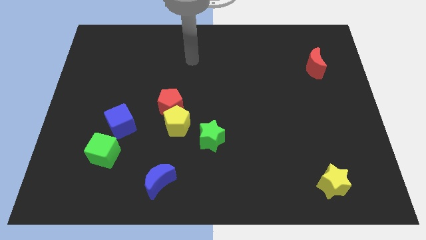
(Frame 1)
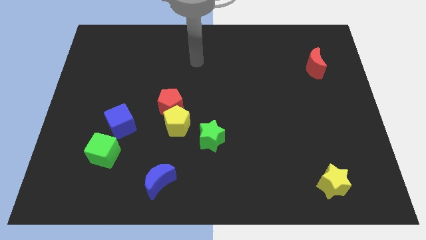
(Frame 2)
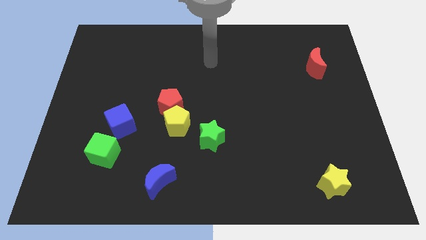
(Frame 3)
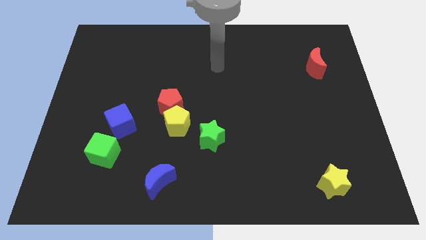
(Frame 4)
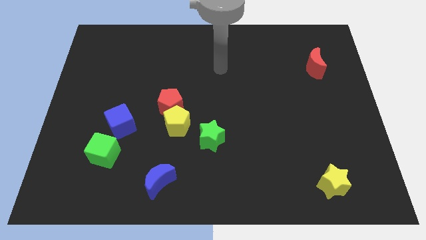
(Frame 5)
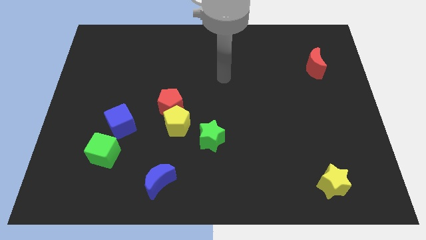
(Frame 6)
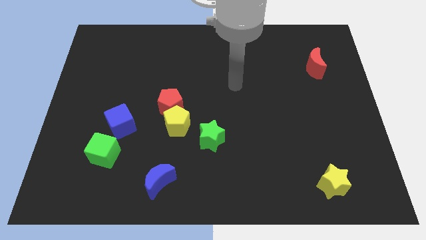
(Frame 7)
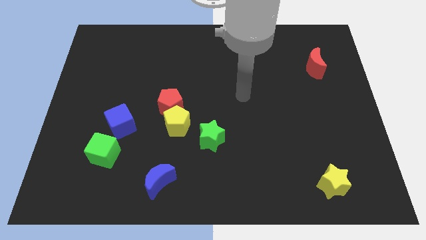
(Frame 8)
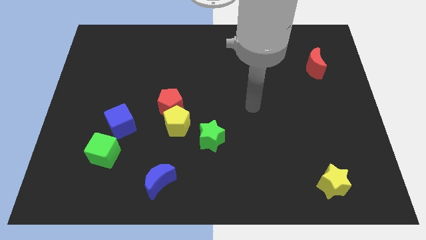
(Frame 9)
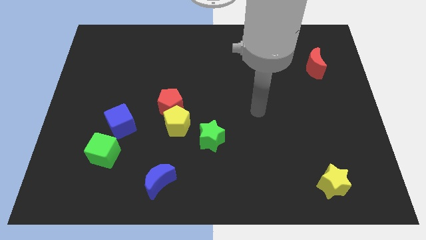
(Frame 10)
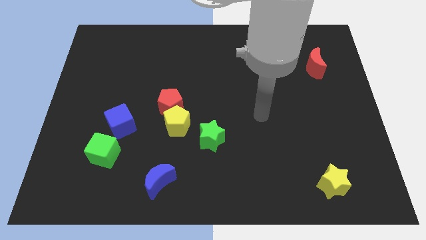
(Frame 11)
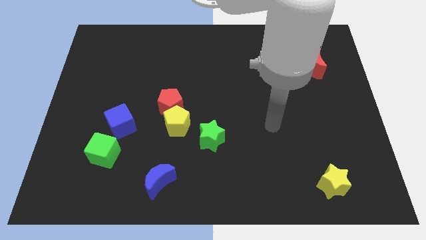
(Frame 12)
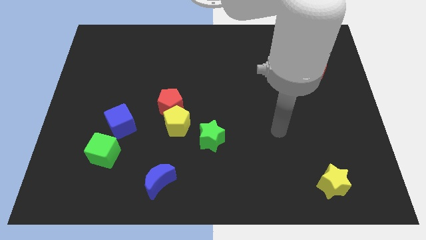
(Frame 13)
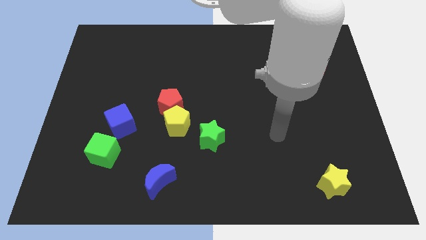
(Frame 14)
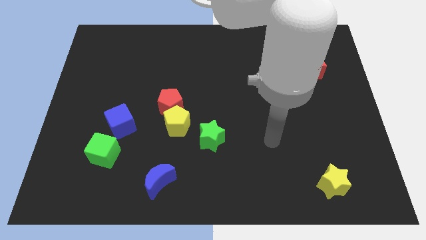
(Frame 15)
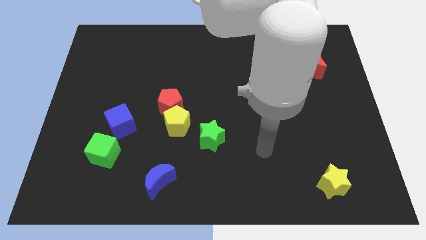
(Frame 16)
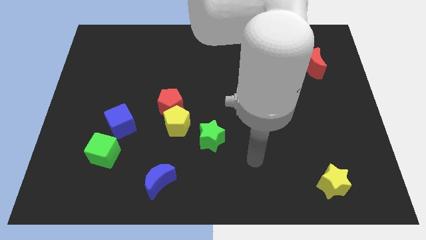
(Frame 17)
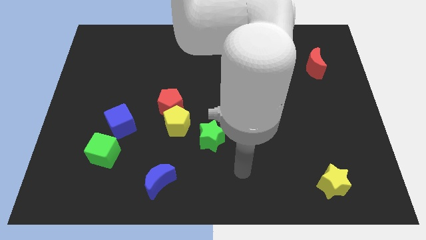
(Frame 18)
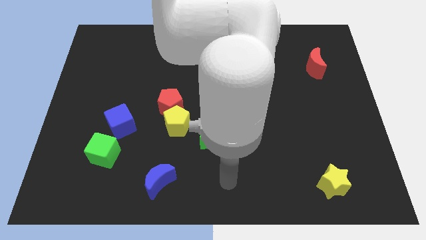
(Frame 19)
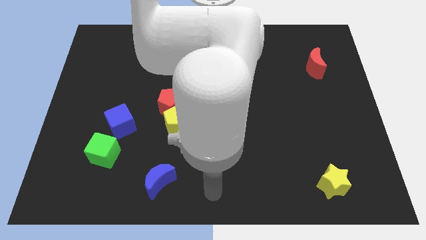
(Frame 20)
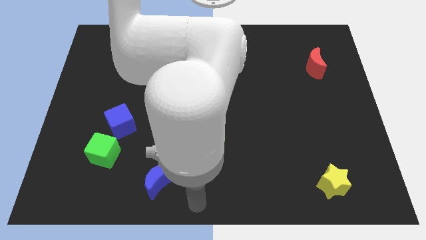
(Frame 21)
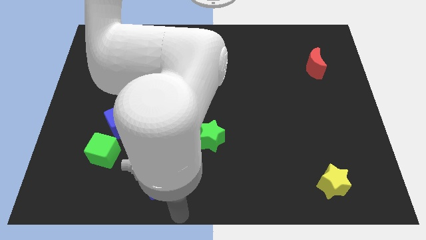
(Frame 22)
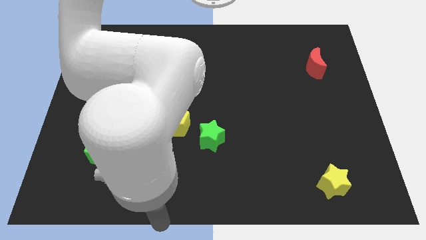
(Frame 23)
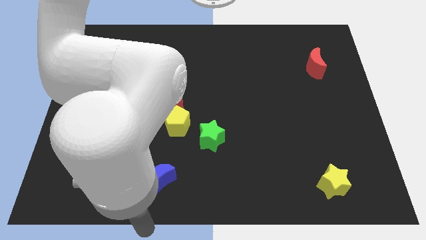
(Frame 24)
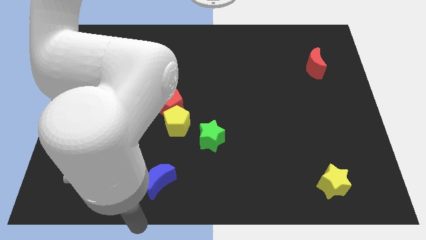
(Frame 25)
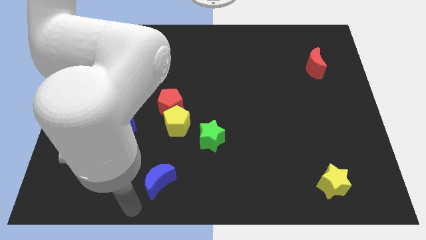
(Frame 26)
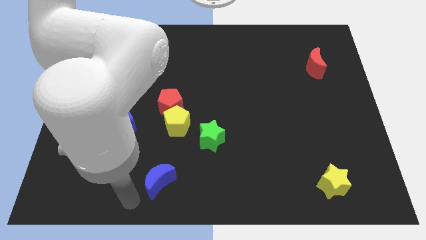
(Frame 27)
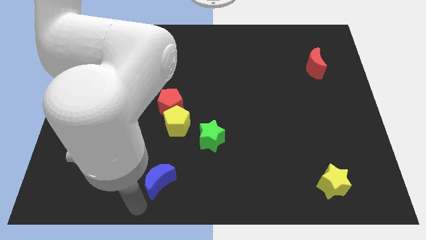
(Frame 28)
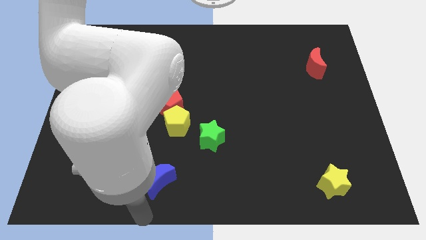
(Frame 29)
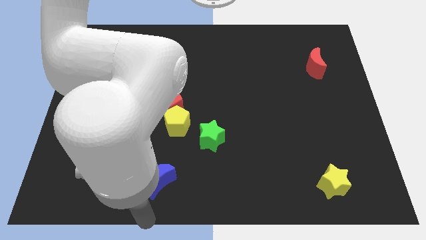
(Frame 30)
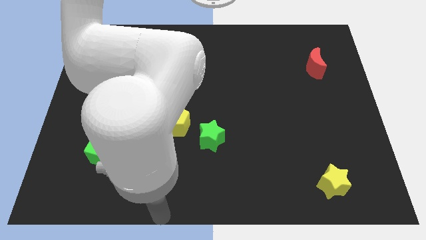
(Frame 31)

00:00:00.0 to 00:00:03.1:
move your hand below the blue moon

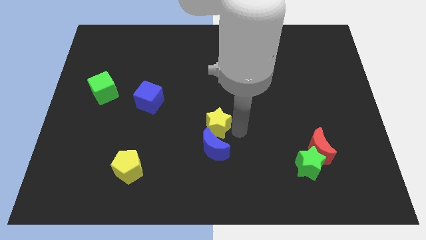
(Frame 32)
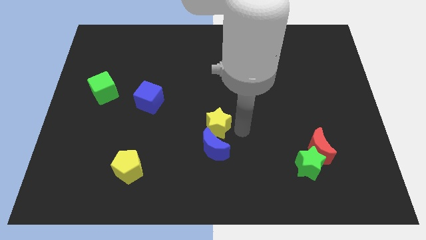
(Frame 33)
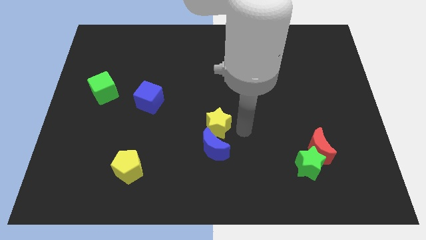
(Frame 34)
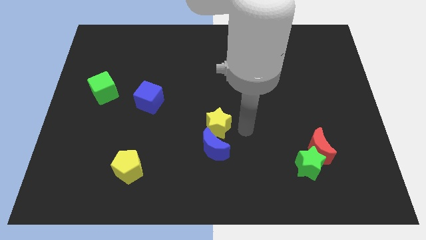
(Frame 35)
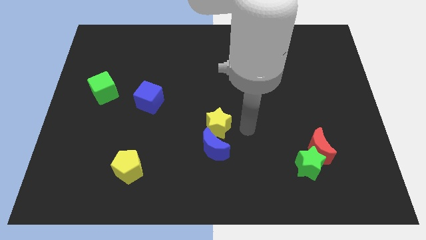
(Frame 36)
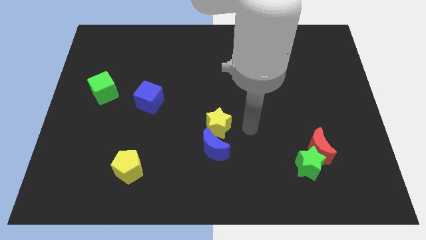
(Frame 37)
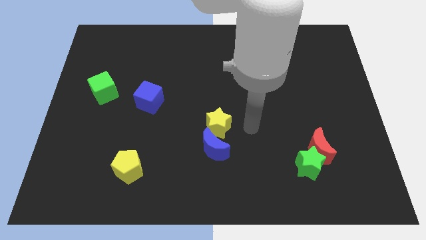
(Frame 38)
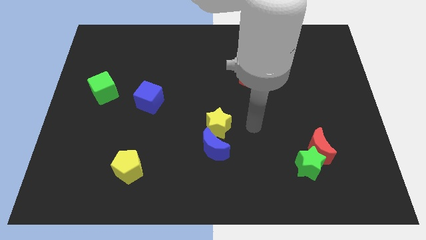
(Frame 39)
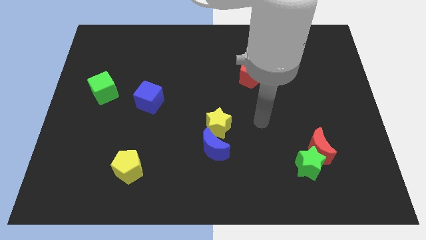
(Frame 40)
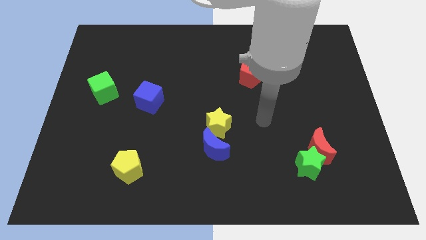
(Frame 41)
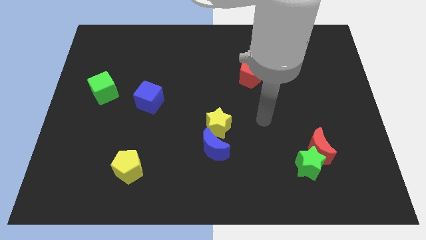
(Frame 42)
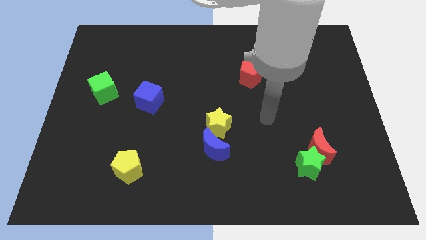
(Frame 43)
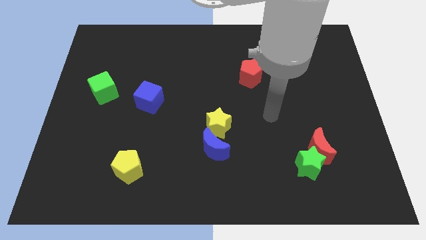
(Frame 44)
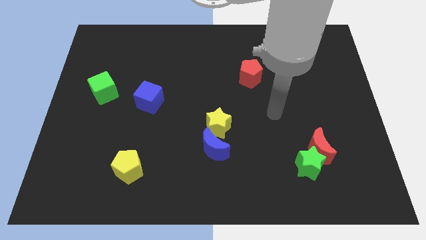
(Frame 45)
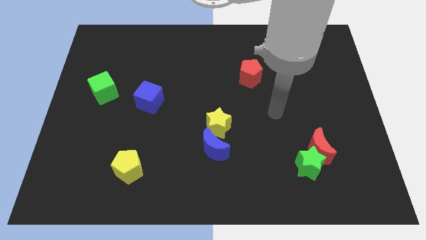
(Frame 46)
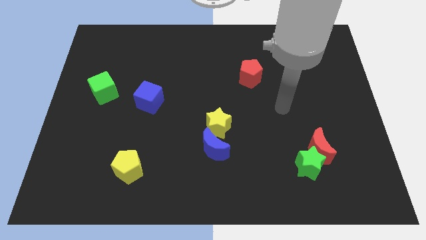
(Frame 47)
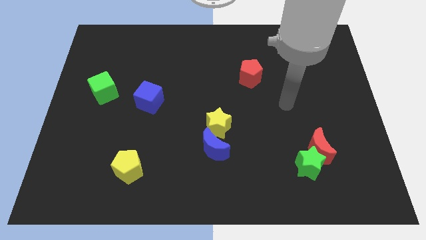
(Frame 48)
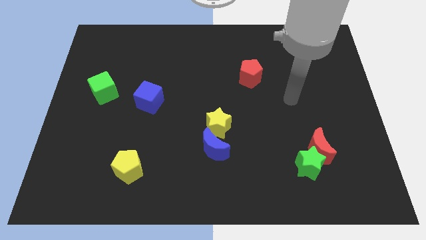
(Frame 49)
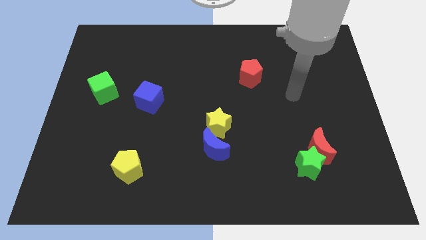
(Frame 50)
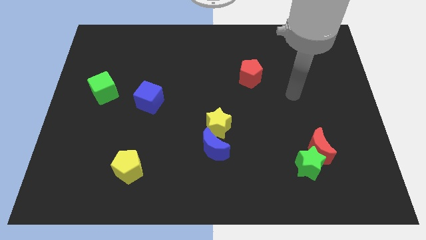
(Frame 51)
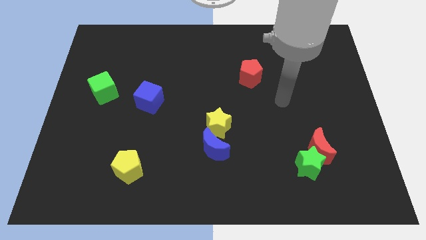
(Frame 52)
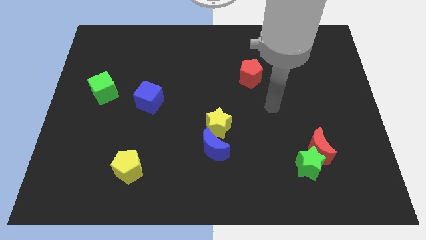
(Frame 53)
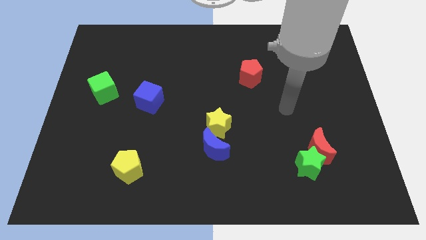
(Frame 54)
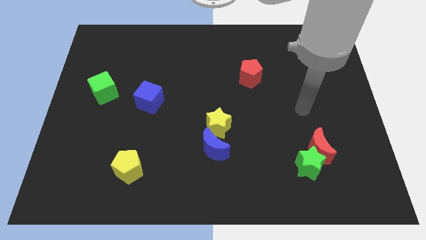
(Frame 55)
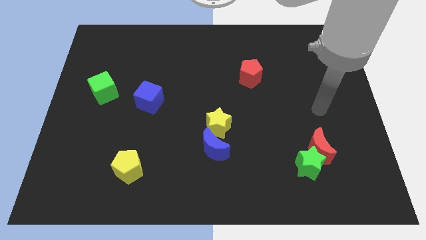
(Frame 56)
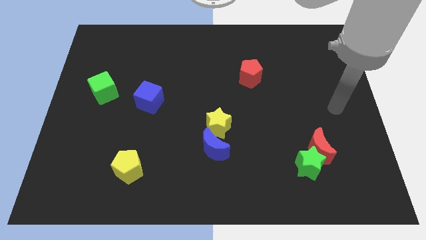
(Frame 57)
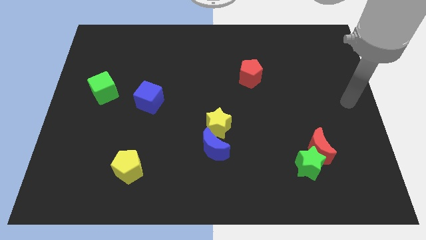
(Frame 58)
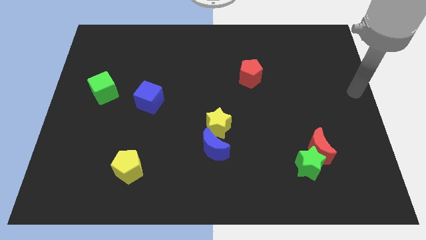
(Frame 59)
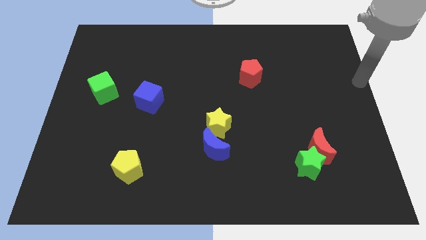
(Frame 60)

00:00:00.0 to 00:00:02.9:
move your arm towards the right side of the board

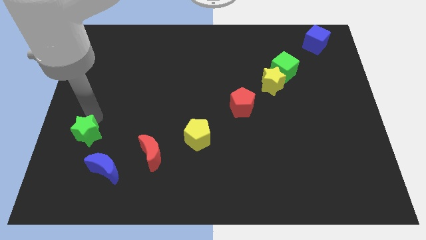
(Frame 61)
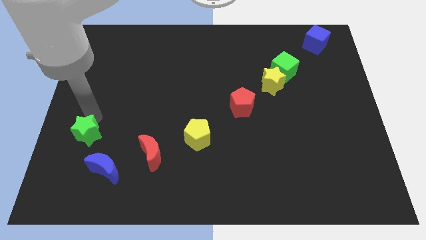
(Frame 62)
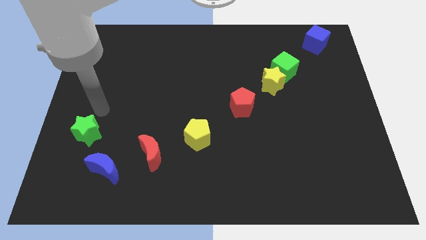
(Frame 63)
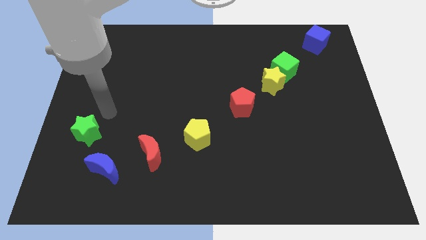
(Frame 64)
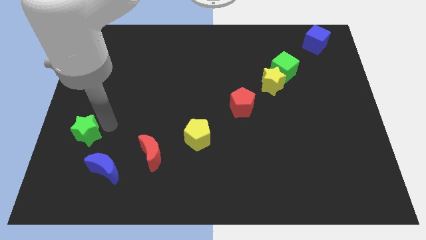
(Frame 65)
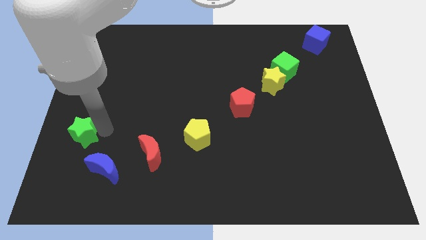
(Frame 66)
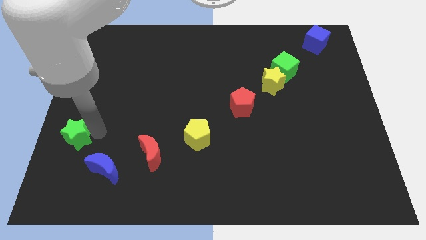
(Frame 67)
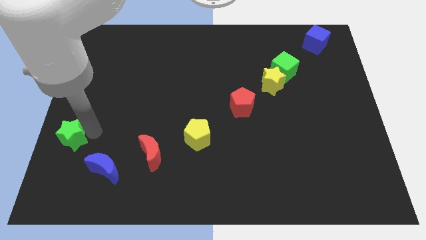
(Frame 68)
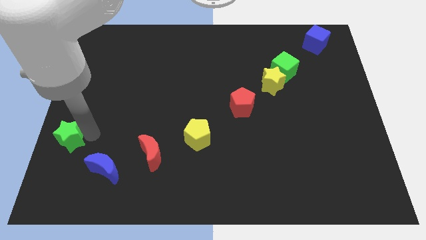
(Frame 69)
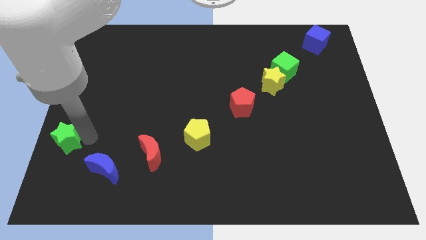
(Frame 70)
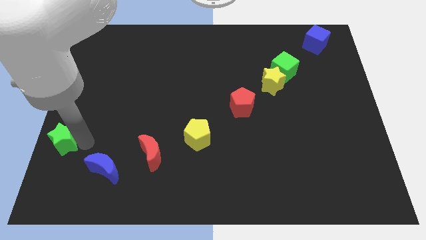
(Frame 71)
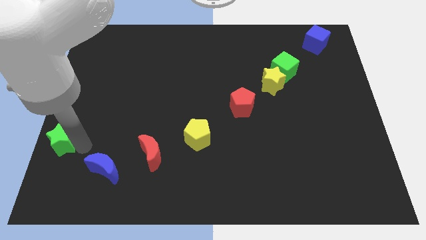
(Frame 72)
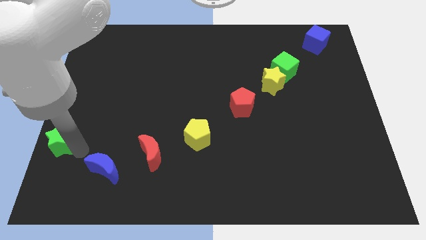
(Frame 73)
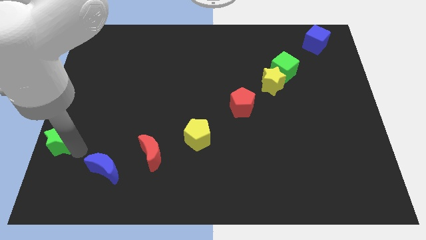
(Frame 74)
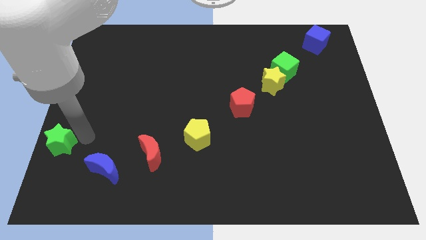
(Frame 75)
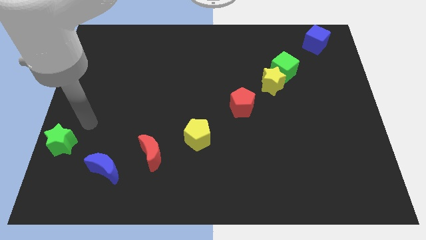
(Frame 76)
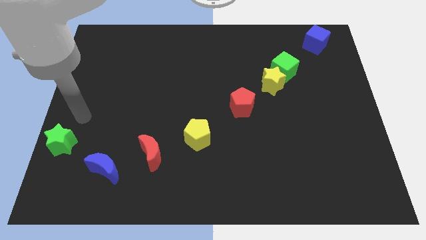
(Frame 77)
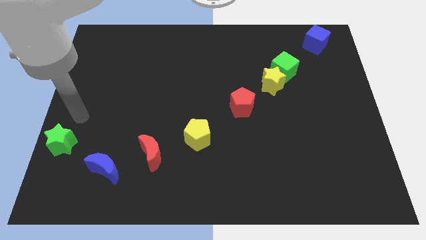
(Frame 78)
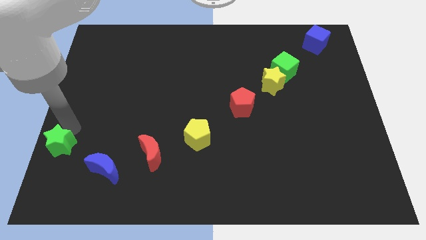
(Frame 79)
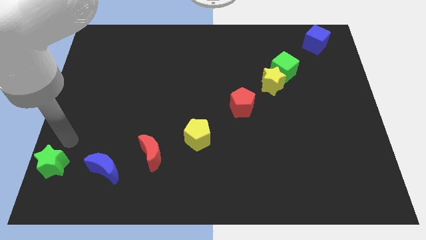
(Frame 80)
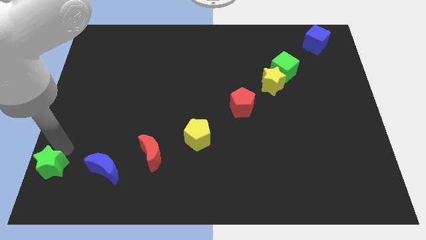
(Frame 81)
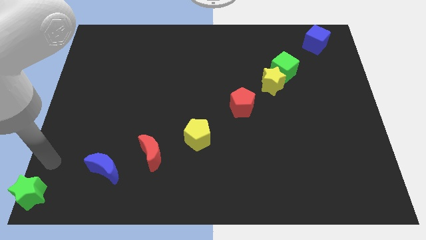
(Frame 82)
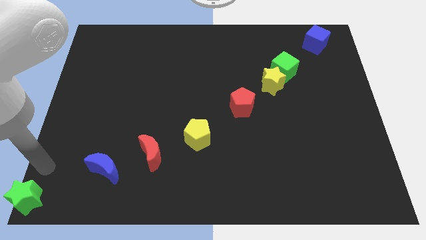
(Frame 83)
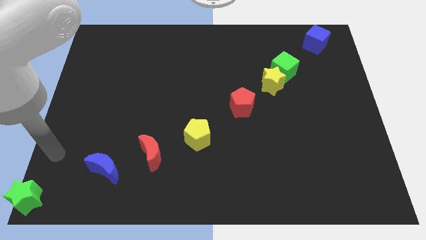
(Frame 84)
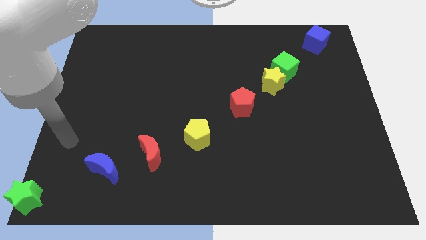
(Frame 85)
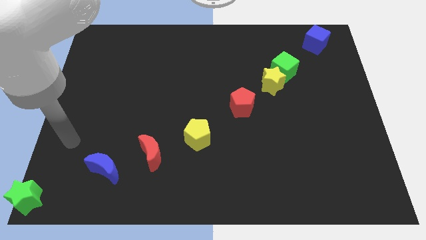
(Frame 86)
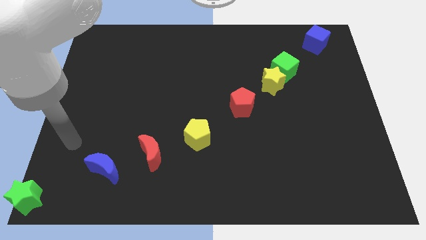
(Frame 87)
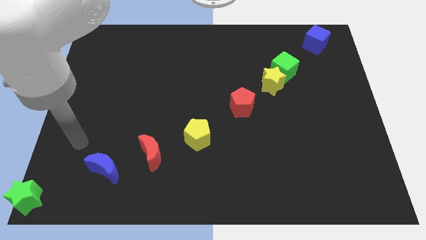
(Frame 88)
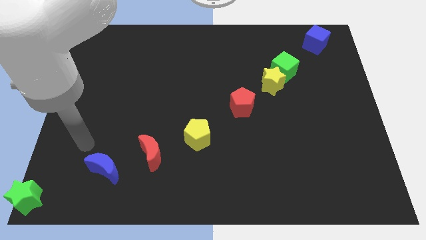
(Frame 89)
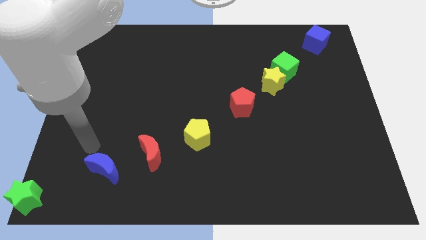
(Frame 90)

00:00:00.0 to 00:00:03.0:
move green star to the left bottom corner
